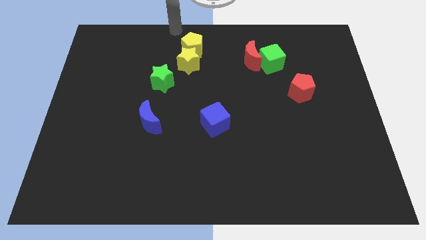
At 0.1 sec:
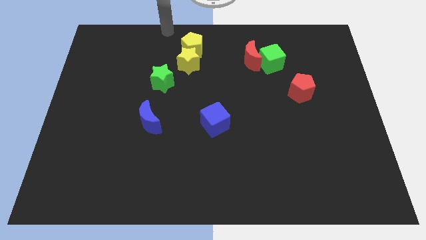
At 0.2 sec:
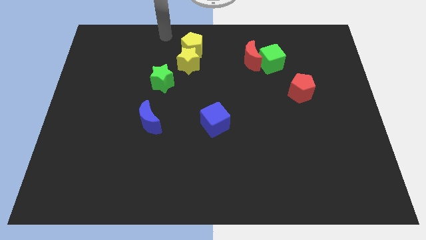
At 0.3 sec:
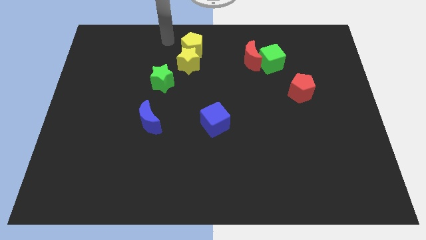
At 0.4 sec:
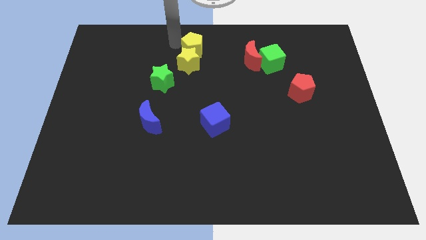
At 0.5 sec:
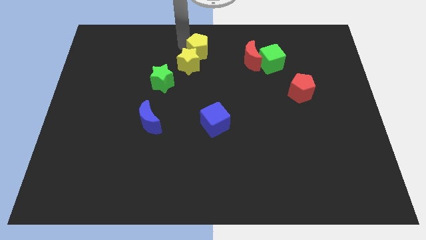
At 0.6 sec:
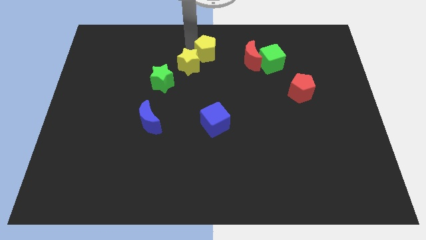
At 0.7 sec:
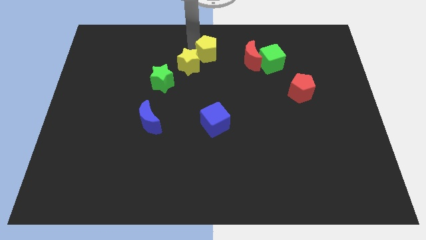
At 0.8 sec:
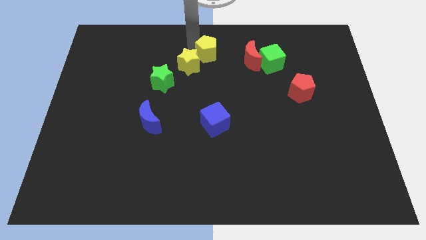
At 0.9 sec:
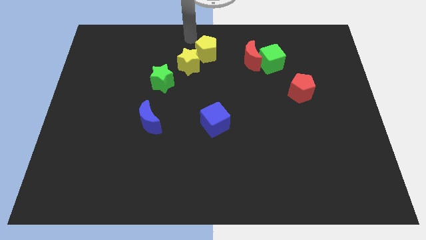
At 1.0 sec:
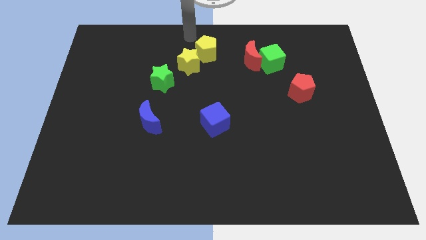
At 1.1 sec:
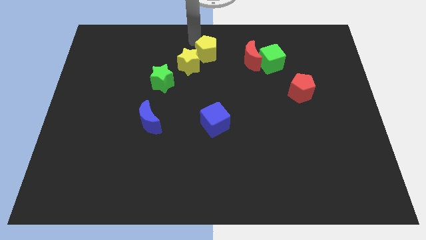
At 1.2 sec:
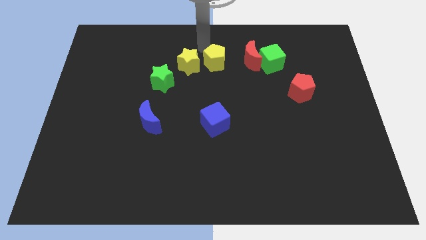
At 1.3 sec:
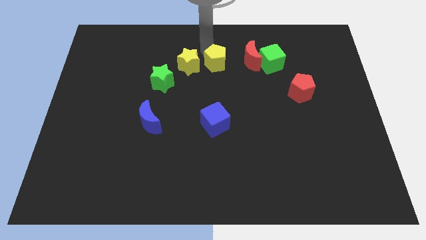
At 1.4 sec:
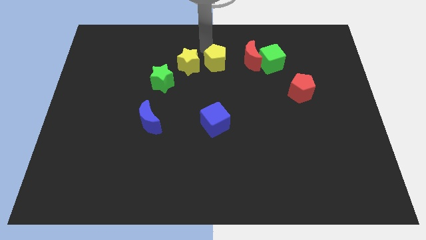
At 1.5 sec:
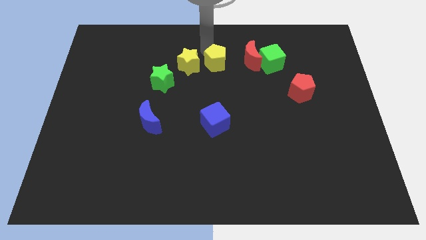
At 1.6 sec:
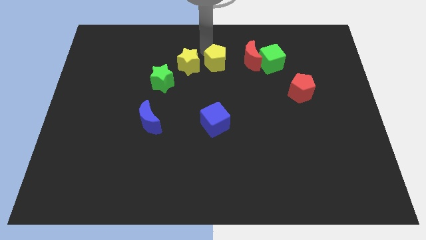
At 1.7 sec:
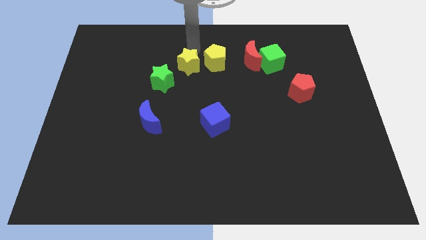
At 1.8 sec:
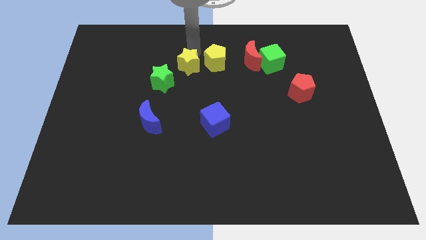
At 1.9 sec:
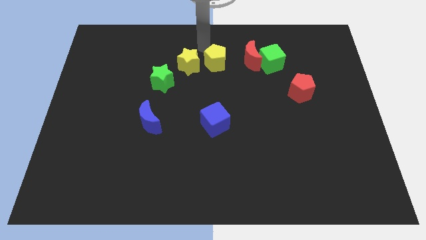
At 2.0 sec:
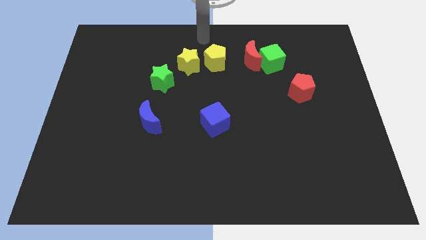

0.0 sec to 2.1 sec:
place yellow pentagon in between the yellow star and red crescent

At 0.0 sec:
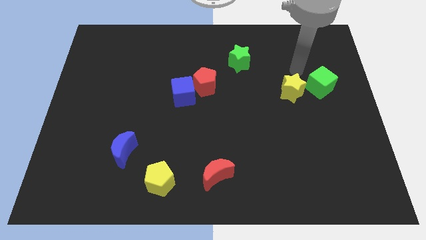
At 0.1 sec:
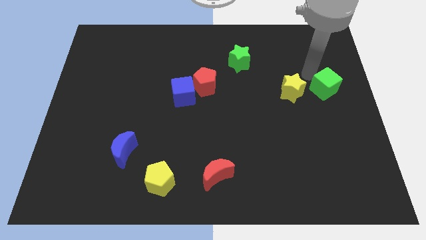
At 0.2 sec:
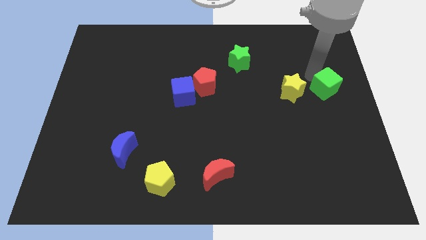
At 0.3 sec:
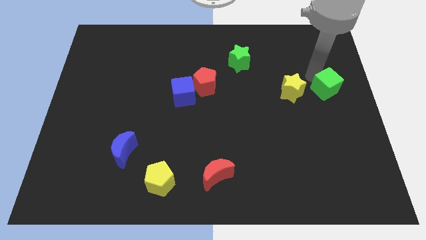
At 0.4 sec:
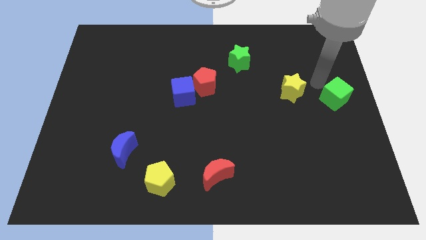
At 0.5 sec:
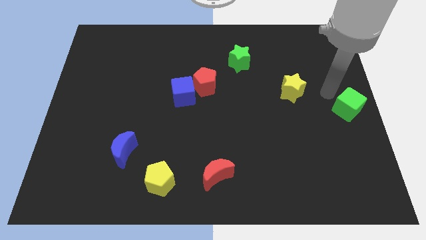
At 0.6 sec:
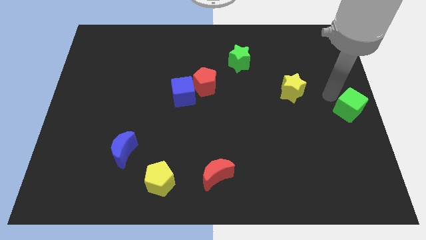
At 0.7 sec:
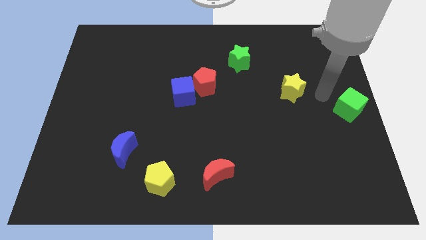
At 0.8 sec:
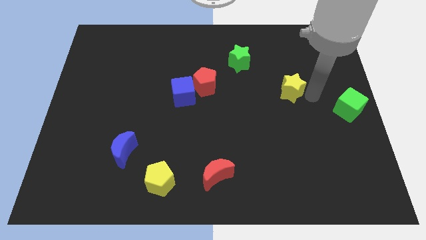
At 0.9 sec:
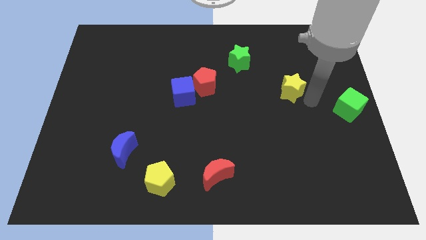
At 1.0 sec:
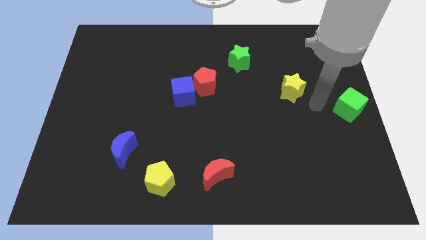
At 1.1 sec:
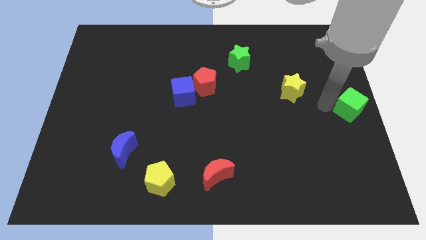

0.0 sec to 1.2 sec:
move the green cube to the right center of the board

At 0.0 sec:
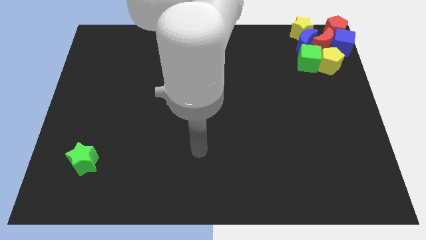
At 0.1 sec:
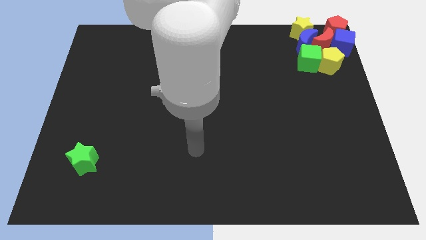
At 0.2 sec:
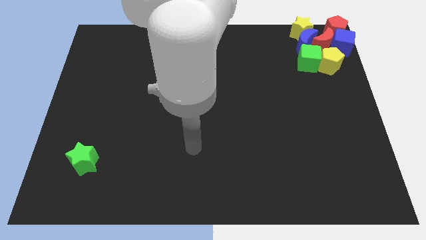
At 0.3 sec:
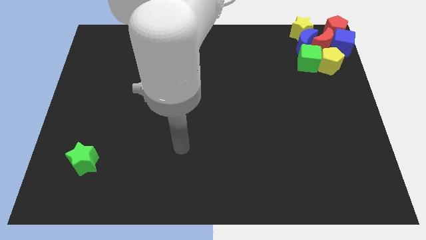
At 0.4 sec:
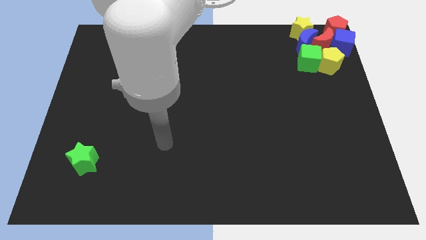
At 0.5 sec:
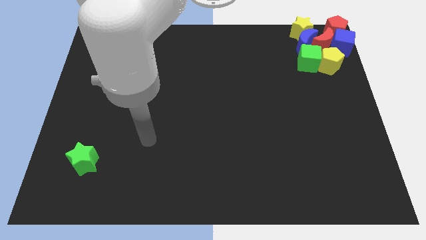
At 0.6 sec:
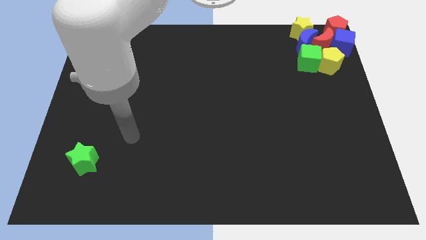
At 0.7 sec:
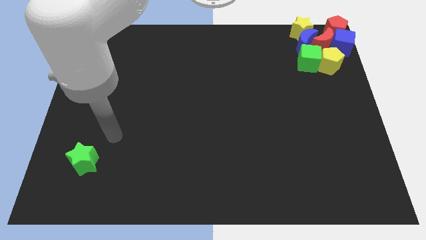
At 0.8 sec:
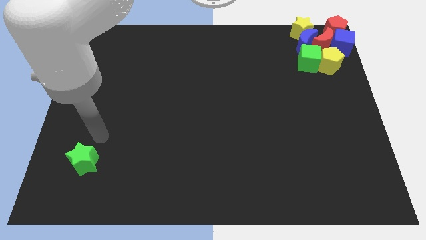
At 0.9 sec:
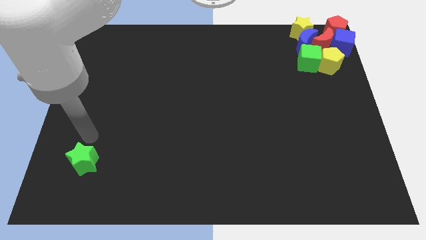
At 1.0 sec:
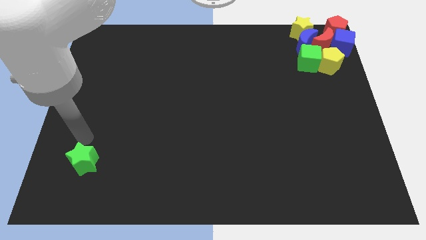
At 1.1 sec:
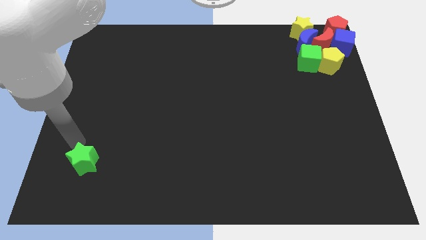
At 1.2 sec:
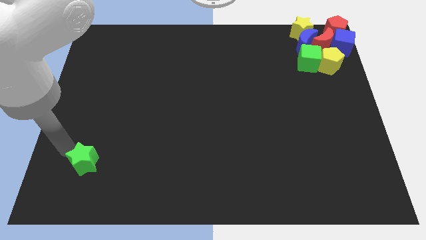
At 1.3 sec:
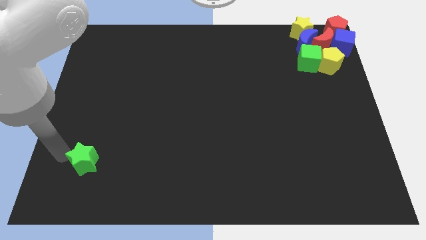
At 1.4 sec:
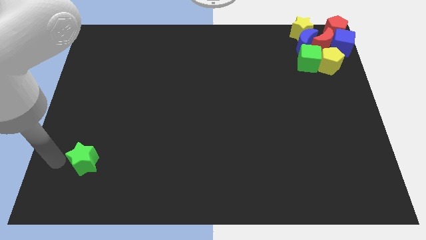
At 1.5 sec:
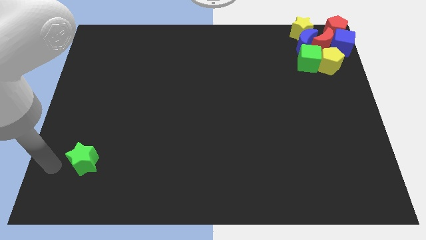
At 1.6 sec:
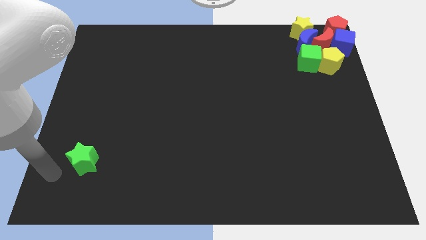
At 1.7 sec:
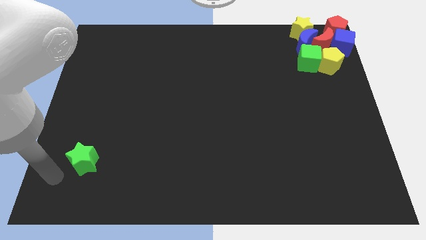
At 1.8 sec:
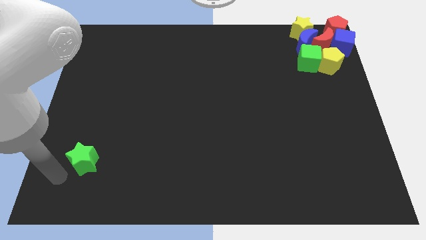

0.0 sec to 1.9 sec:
push the arm close to the green star

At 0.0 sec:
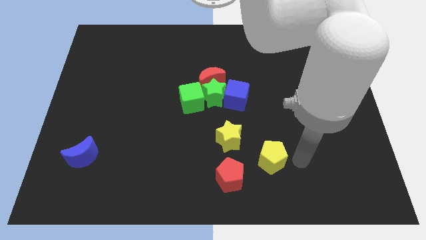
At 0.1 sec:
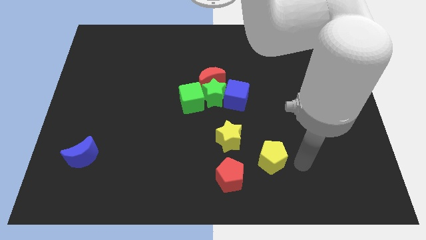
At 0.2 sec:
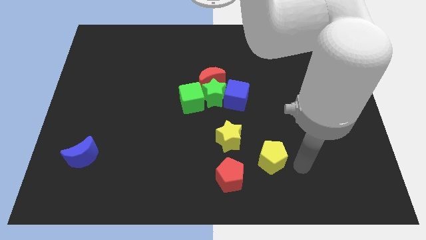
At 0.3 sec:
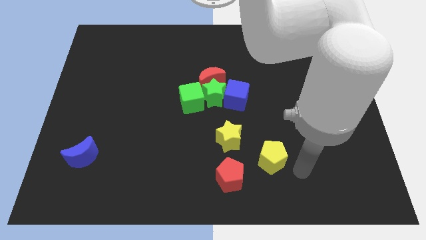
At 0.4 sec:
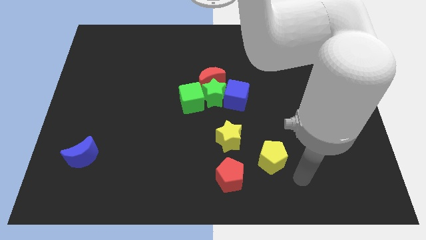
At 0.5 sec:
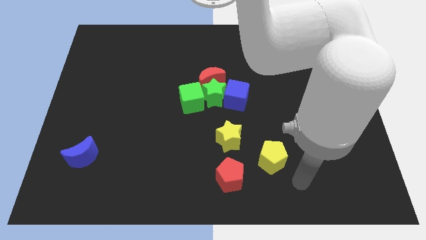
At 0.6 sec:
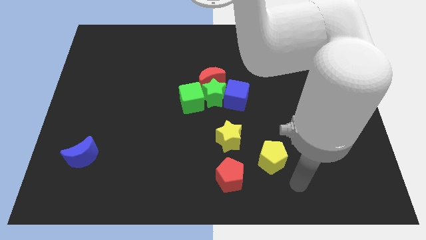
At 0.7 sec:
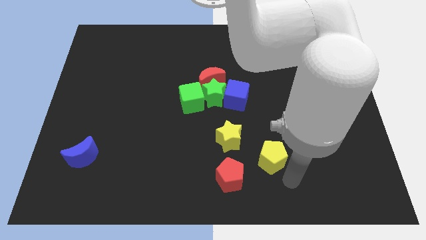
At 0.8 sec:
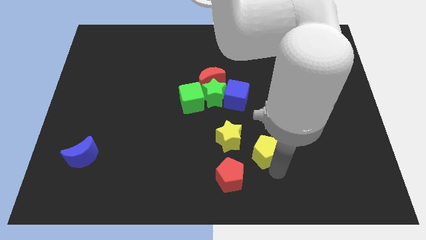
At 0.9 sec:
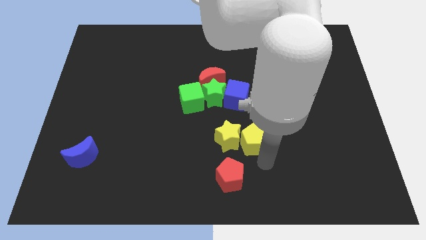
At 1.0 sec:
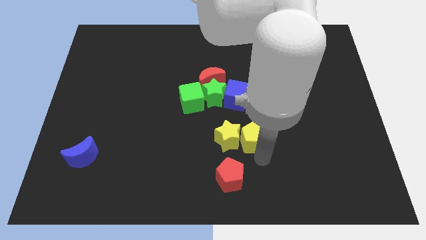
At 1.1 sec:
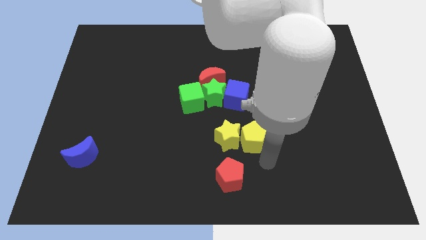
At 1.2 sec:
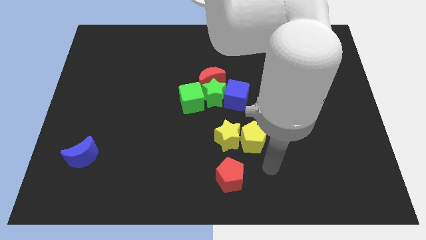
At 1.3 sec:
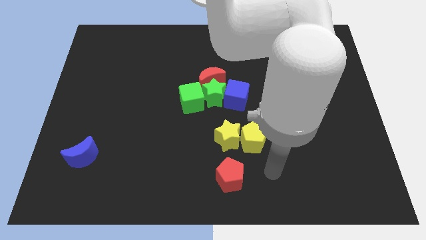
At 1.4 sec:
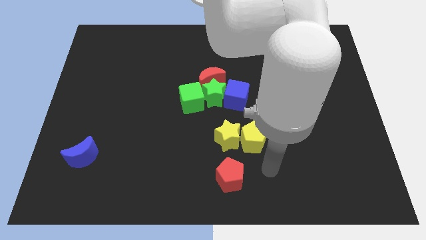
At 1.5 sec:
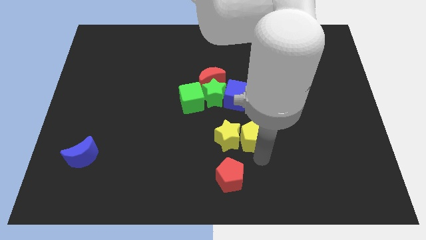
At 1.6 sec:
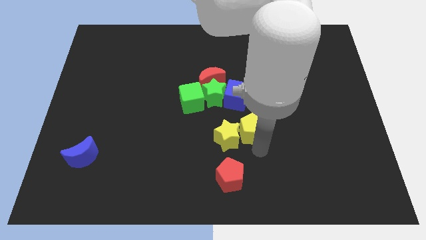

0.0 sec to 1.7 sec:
push yellow pentagon into the yellow star

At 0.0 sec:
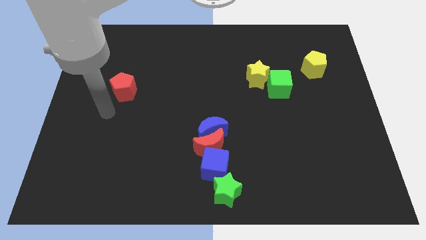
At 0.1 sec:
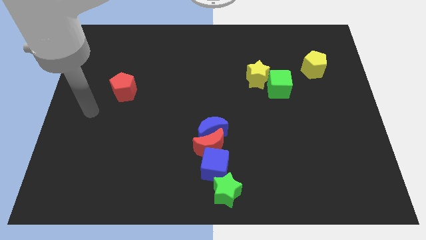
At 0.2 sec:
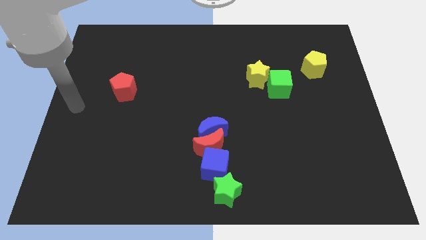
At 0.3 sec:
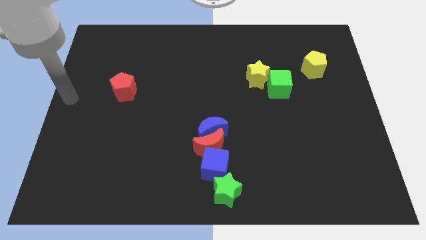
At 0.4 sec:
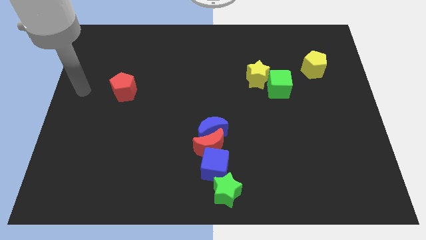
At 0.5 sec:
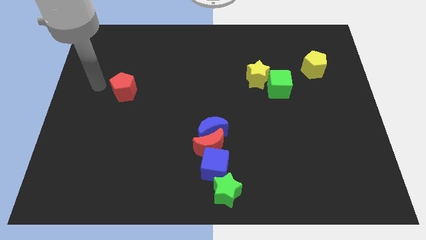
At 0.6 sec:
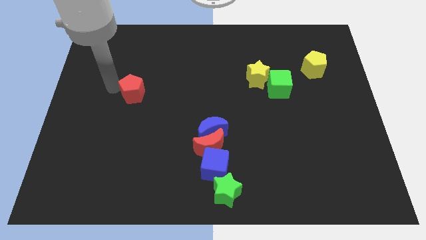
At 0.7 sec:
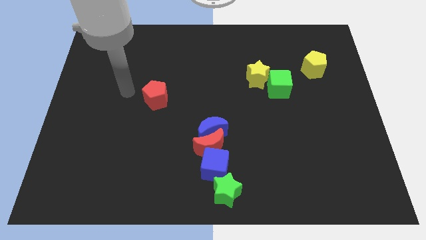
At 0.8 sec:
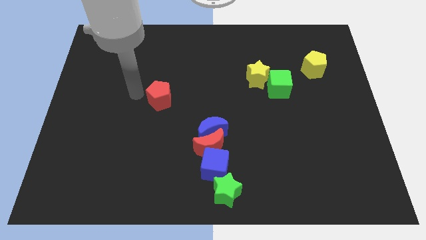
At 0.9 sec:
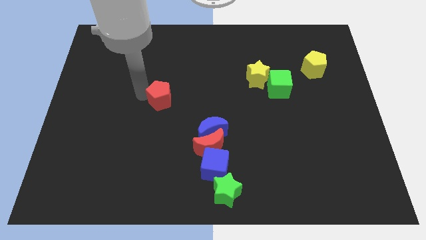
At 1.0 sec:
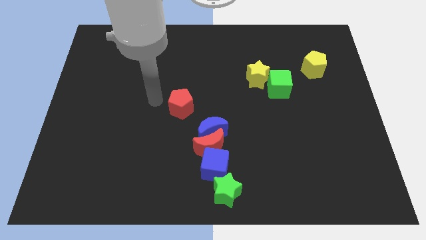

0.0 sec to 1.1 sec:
push the red pentagon towards the centre of board

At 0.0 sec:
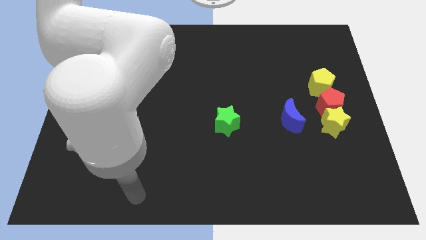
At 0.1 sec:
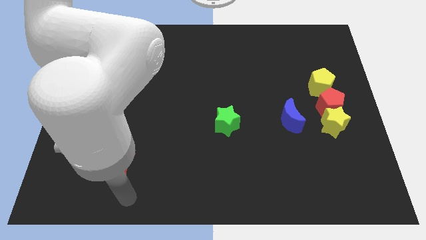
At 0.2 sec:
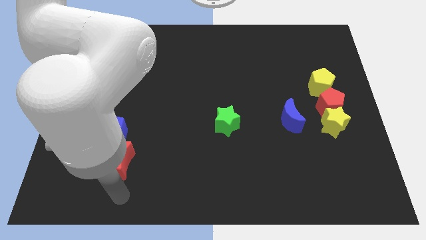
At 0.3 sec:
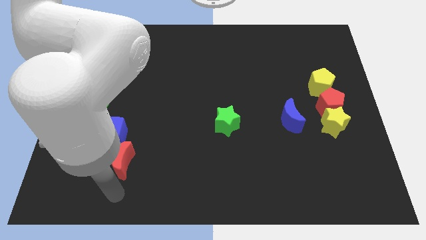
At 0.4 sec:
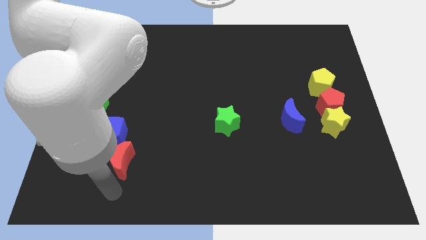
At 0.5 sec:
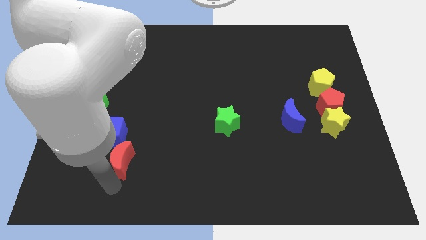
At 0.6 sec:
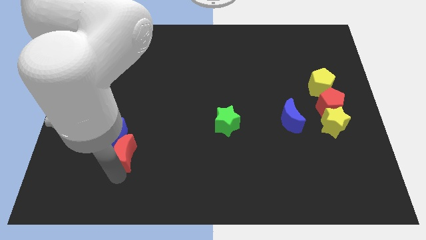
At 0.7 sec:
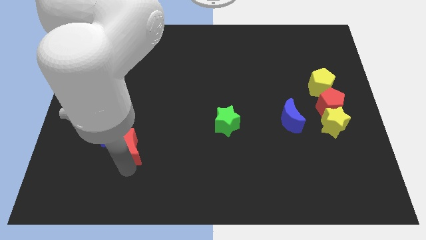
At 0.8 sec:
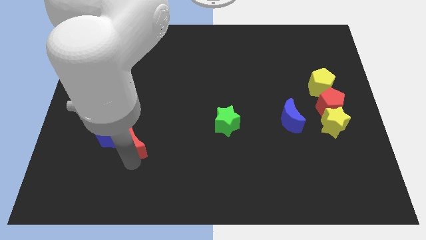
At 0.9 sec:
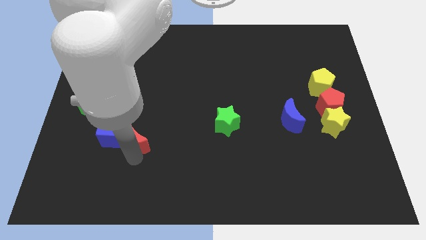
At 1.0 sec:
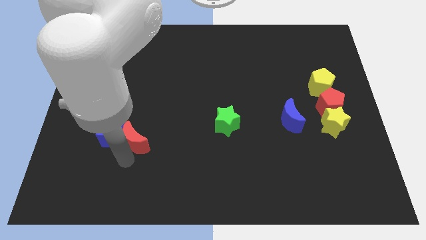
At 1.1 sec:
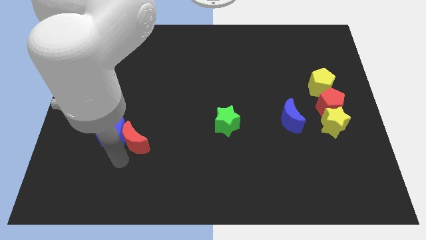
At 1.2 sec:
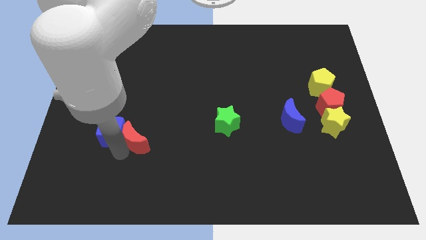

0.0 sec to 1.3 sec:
move the red moon to the right of the blue cube
